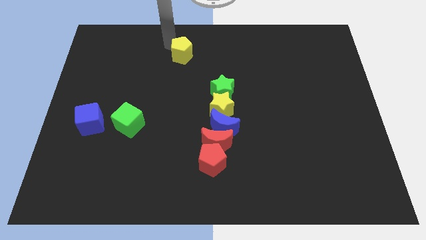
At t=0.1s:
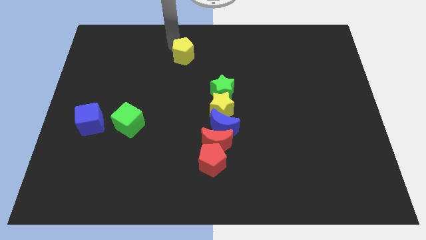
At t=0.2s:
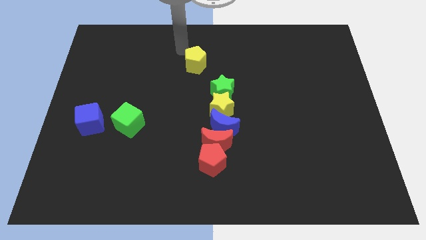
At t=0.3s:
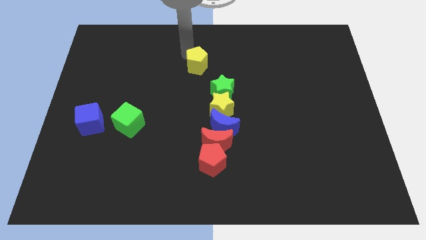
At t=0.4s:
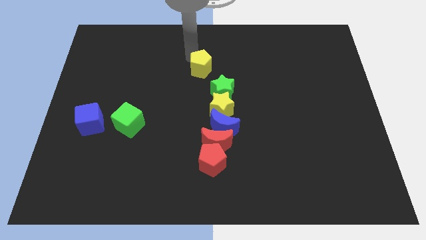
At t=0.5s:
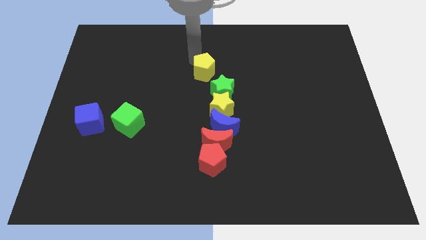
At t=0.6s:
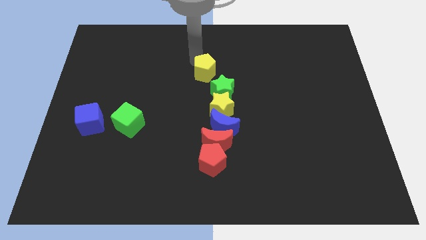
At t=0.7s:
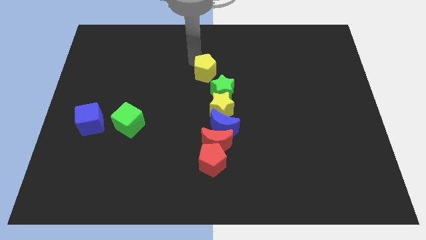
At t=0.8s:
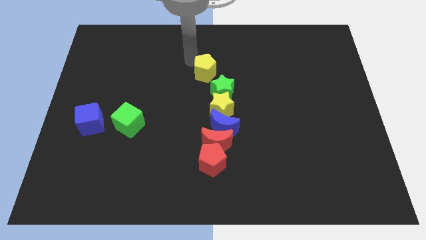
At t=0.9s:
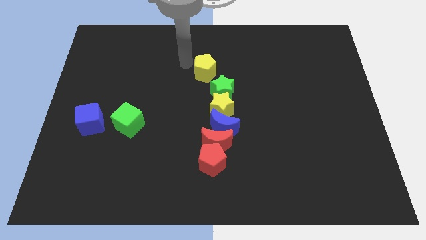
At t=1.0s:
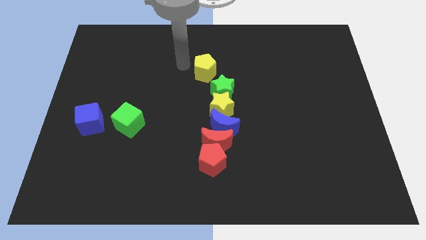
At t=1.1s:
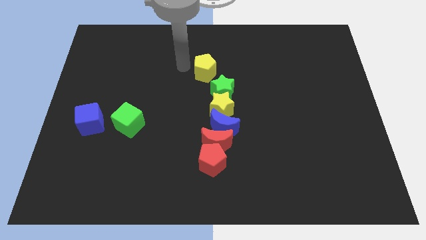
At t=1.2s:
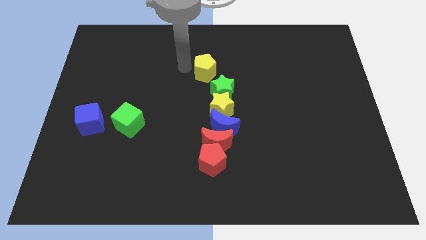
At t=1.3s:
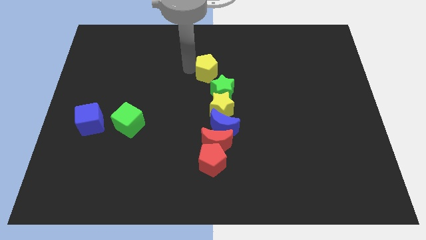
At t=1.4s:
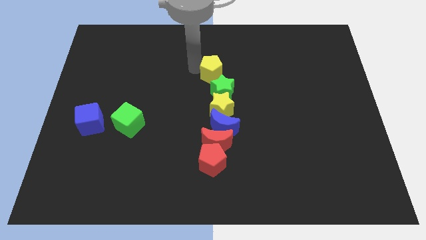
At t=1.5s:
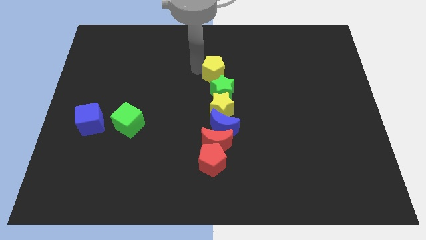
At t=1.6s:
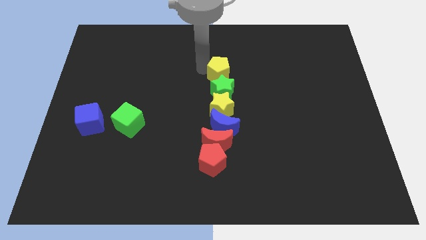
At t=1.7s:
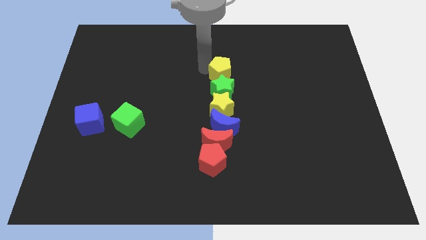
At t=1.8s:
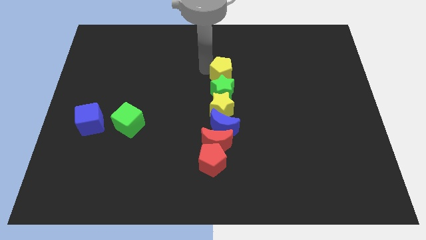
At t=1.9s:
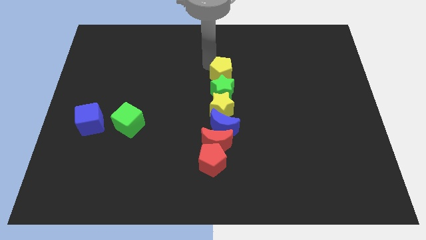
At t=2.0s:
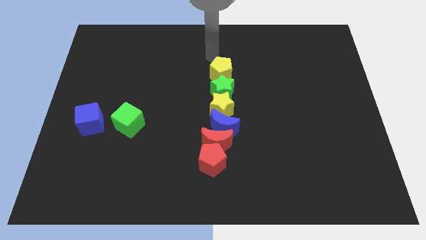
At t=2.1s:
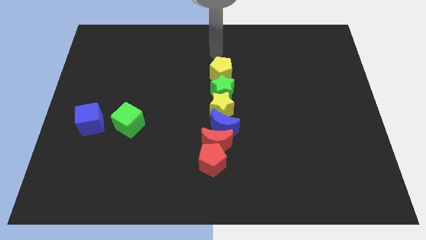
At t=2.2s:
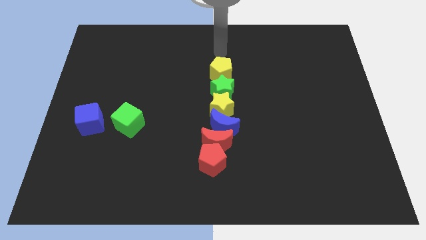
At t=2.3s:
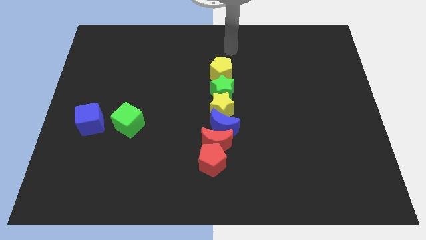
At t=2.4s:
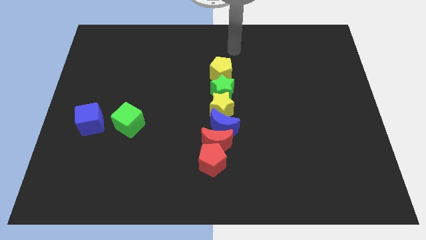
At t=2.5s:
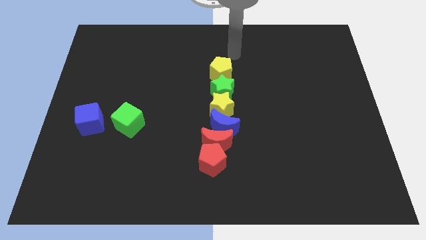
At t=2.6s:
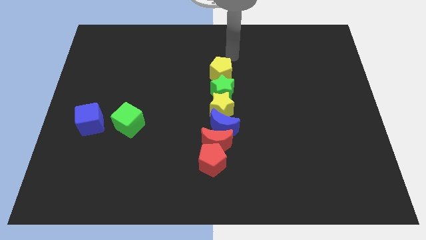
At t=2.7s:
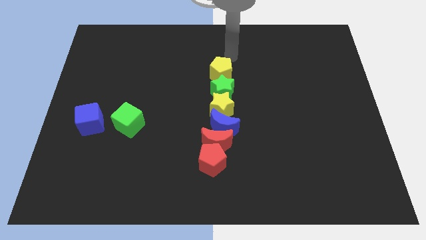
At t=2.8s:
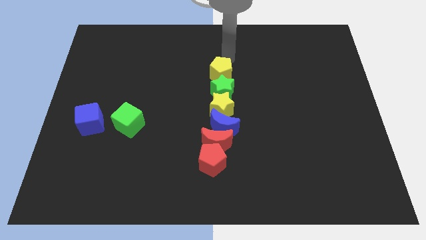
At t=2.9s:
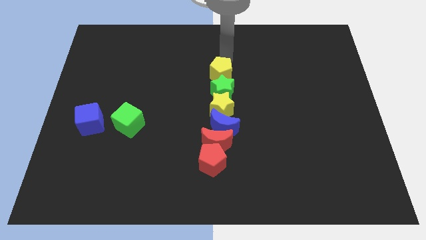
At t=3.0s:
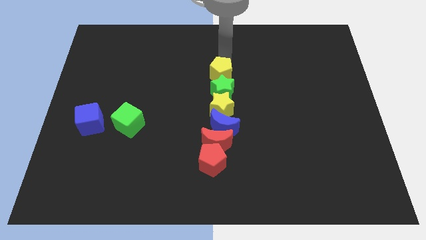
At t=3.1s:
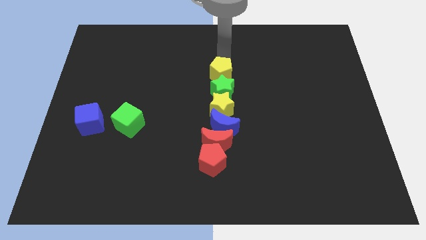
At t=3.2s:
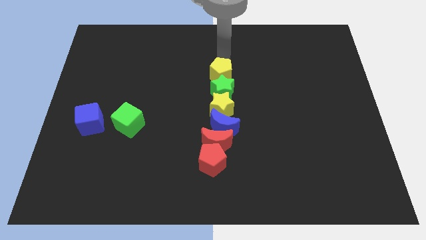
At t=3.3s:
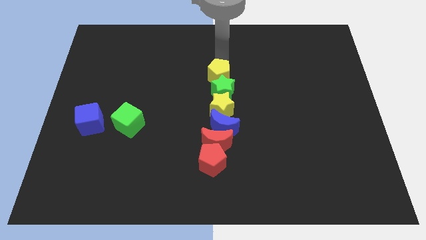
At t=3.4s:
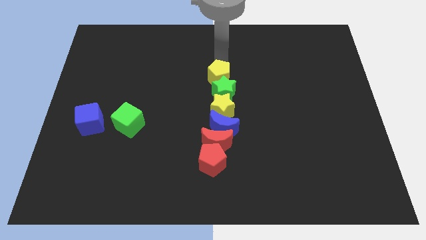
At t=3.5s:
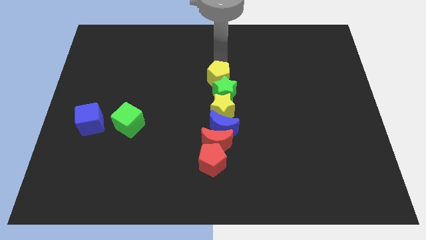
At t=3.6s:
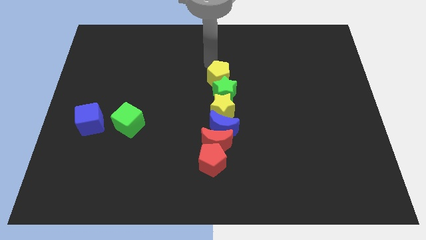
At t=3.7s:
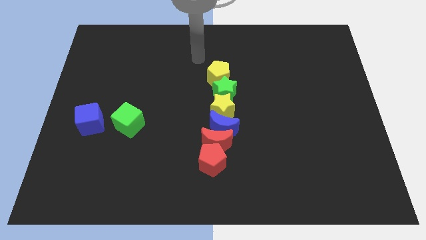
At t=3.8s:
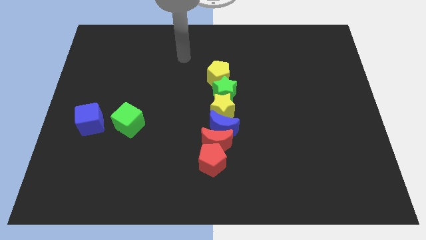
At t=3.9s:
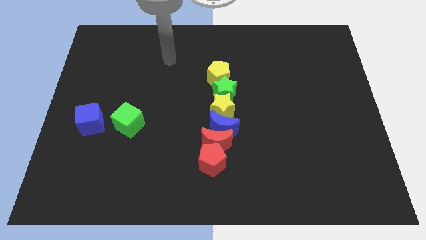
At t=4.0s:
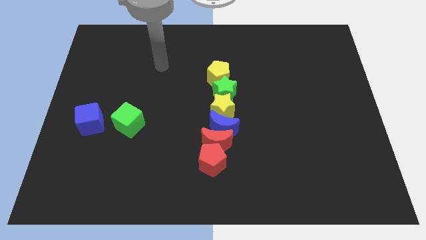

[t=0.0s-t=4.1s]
place the yellow pentagon above the green star

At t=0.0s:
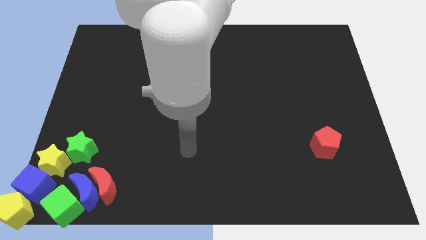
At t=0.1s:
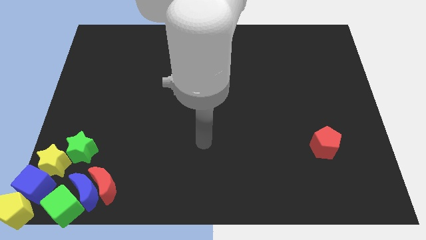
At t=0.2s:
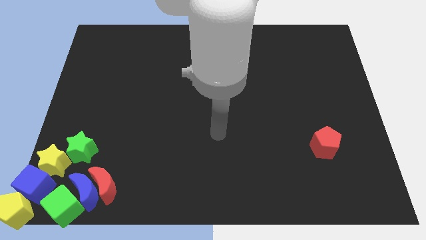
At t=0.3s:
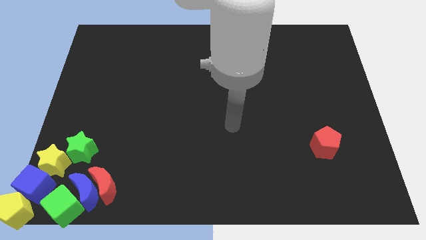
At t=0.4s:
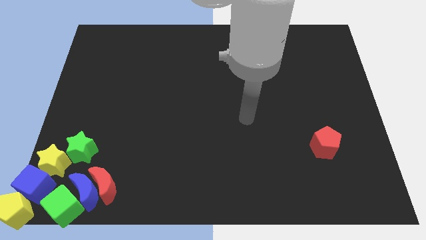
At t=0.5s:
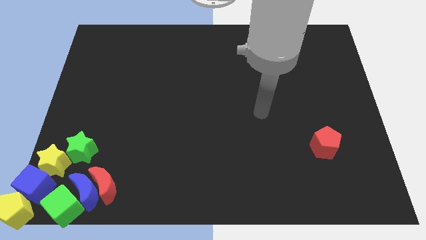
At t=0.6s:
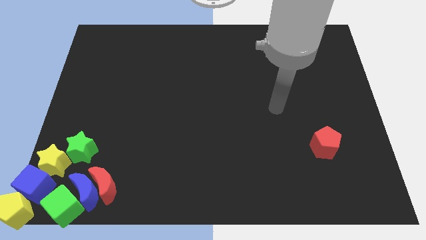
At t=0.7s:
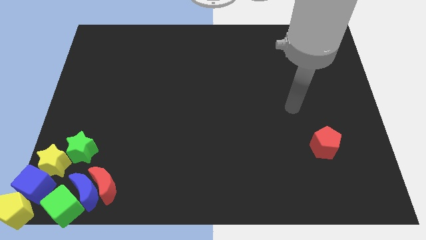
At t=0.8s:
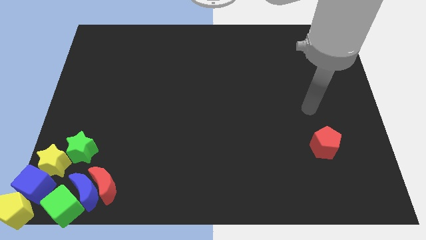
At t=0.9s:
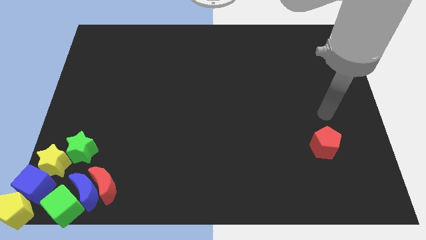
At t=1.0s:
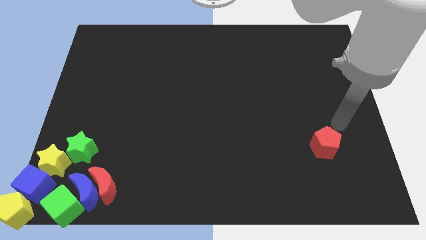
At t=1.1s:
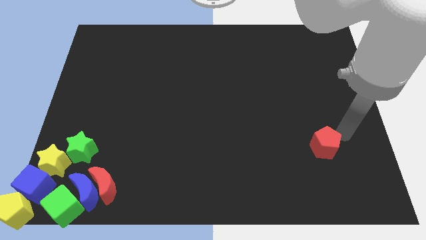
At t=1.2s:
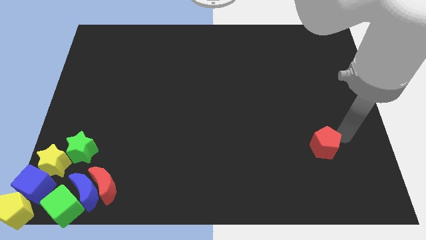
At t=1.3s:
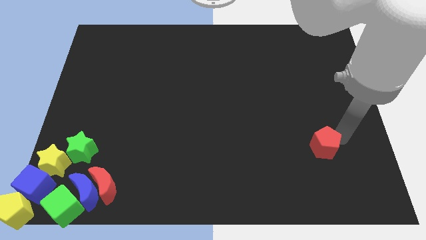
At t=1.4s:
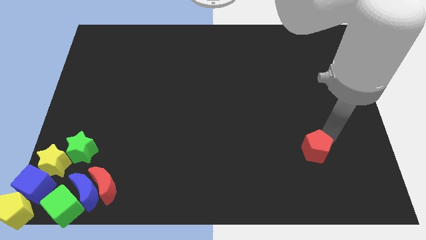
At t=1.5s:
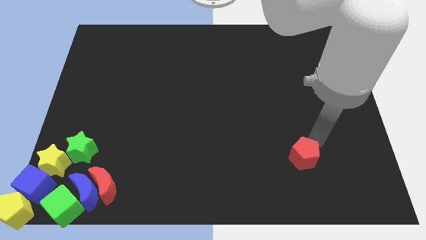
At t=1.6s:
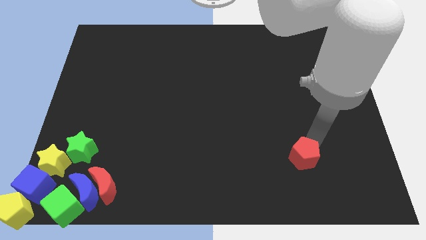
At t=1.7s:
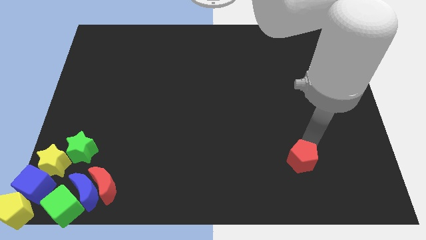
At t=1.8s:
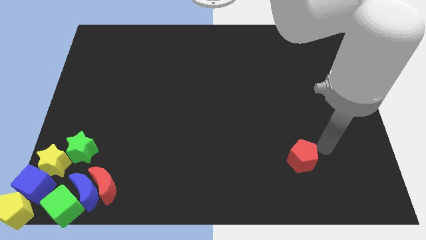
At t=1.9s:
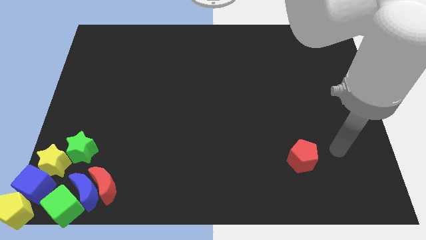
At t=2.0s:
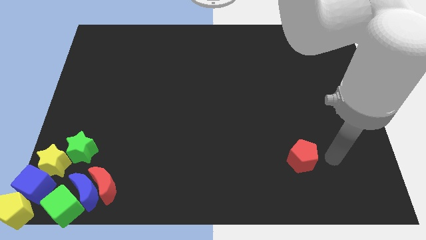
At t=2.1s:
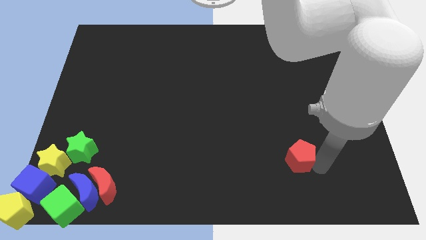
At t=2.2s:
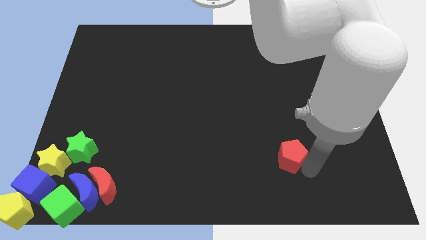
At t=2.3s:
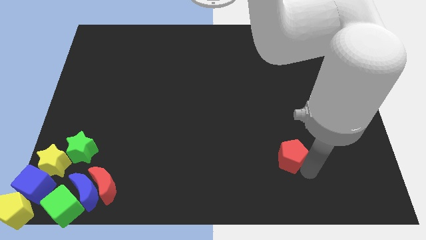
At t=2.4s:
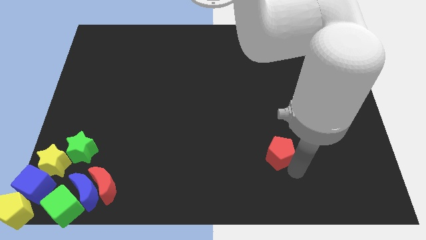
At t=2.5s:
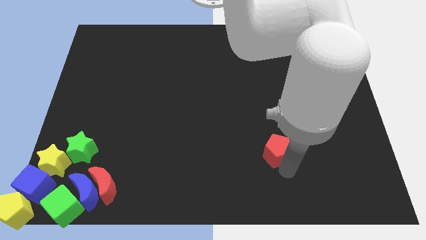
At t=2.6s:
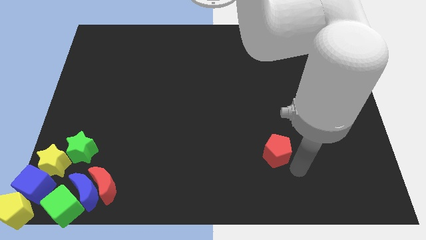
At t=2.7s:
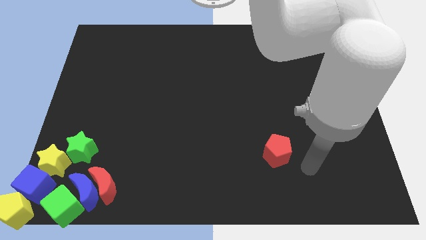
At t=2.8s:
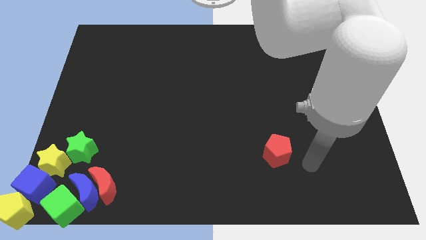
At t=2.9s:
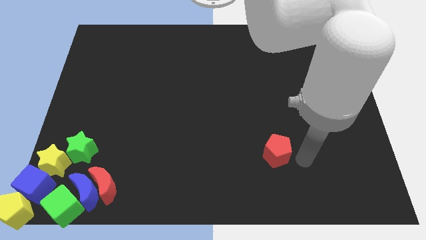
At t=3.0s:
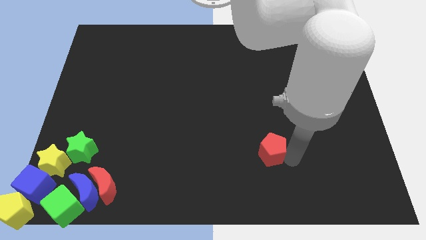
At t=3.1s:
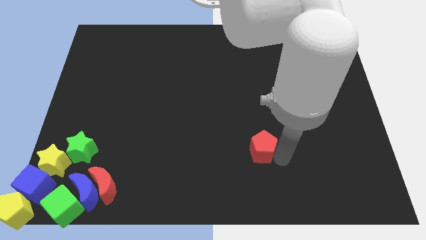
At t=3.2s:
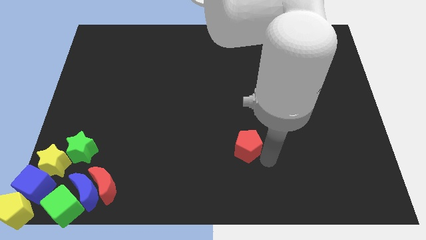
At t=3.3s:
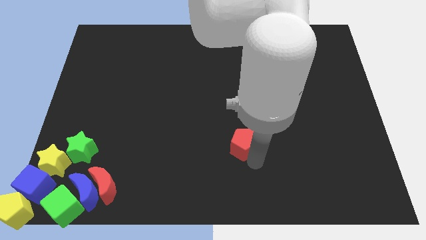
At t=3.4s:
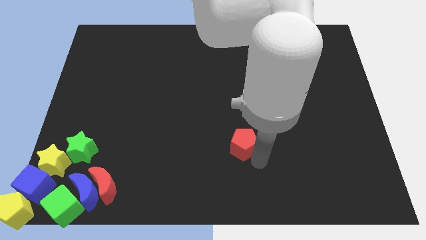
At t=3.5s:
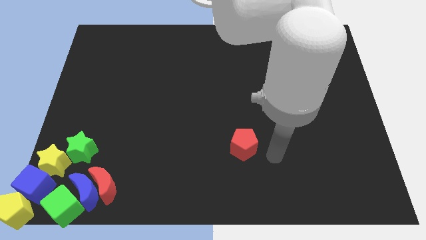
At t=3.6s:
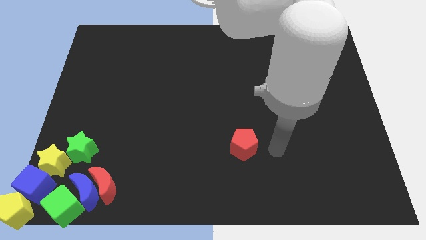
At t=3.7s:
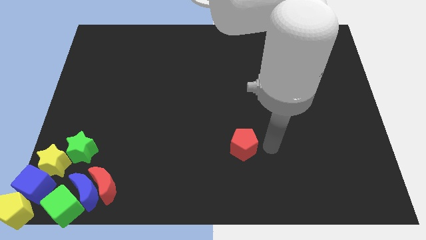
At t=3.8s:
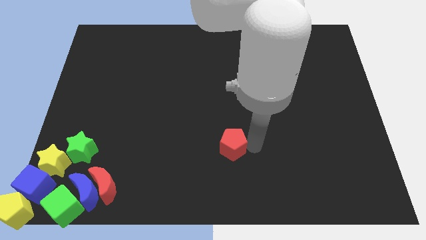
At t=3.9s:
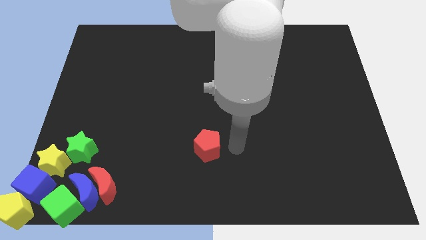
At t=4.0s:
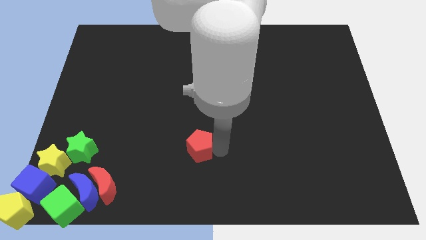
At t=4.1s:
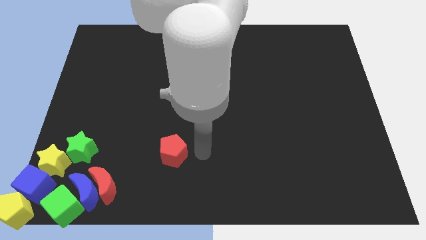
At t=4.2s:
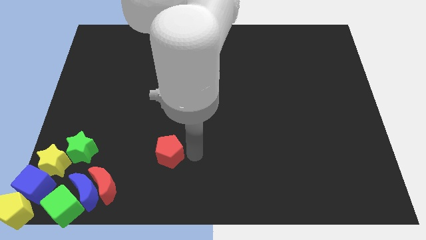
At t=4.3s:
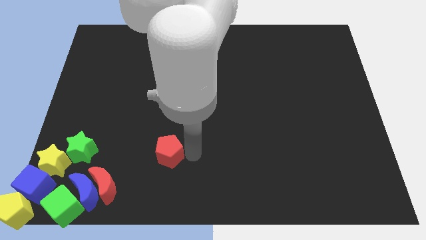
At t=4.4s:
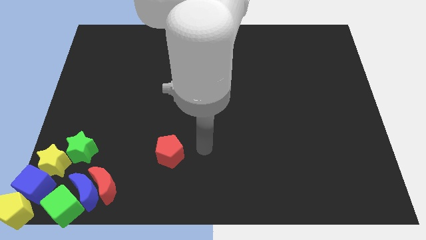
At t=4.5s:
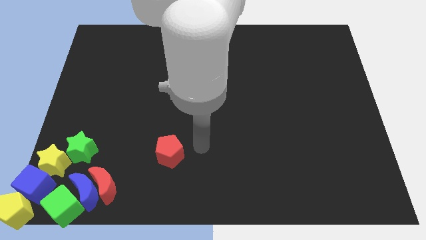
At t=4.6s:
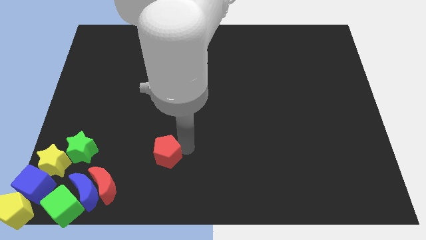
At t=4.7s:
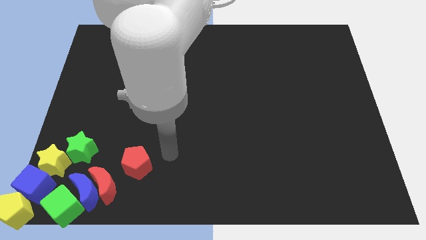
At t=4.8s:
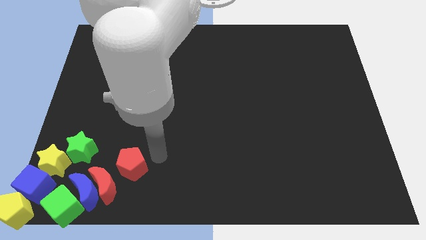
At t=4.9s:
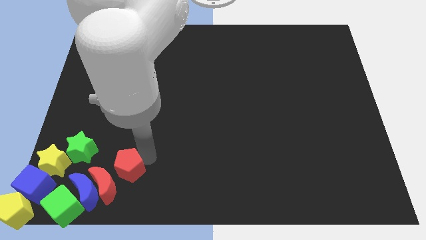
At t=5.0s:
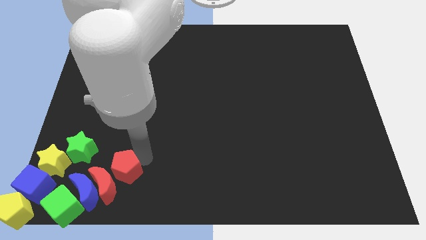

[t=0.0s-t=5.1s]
push the red pentagon towards the red crescent
